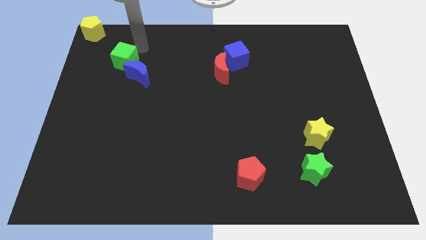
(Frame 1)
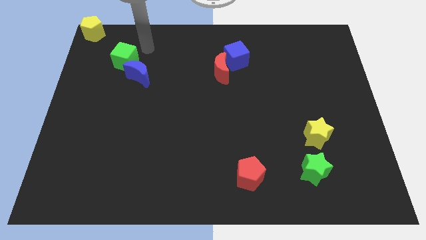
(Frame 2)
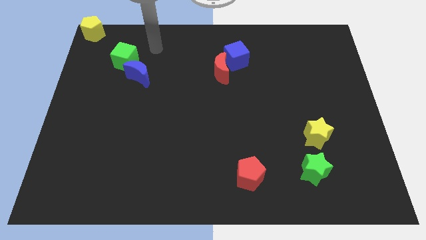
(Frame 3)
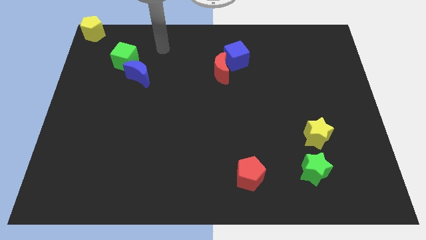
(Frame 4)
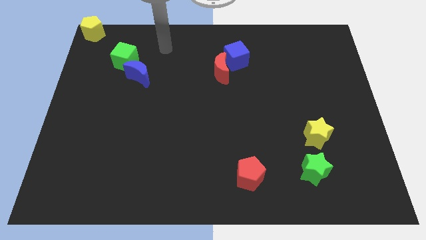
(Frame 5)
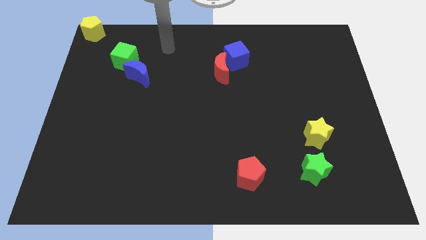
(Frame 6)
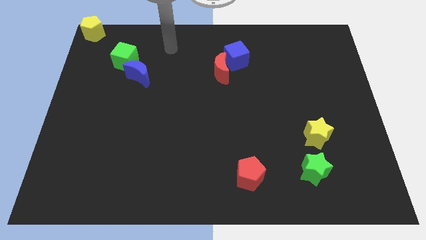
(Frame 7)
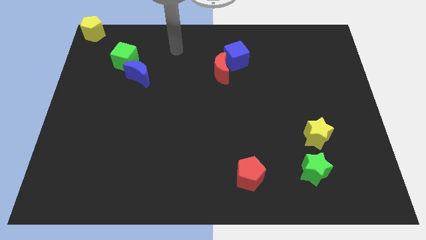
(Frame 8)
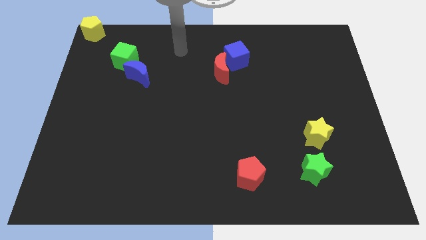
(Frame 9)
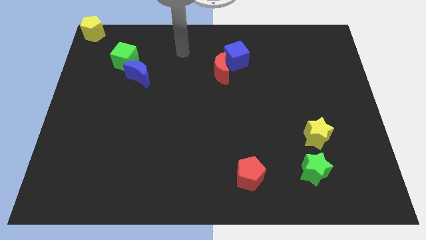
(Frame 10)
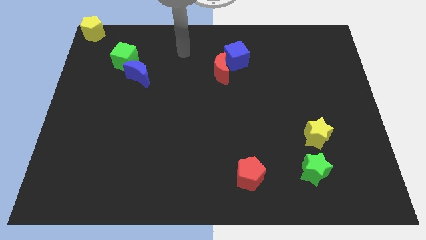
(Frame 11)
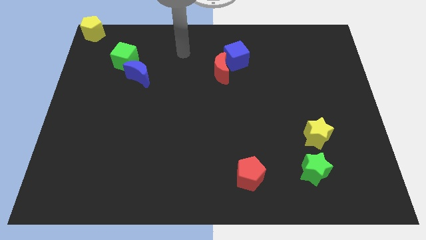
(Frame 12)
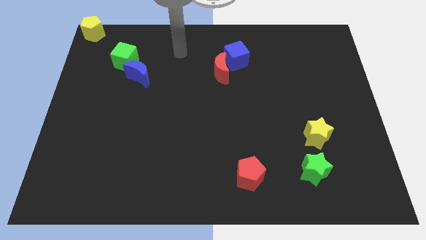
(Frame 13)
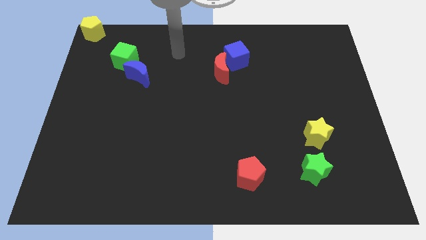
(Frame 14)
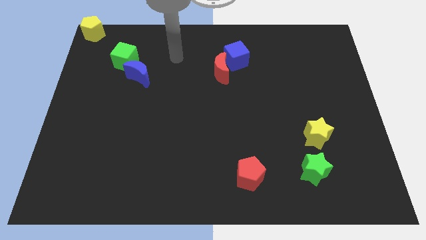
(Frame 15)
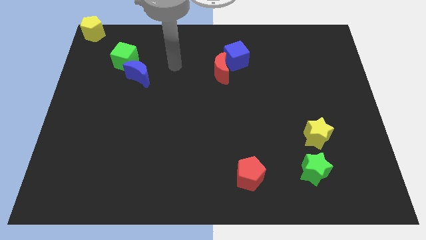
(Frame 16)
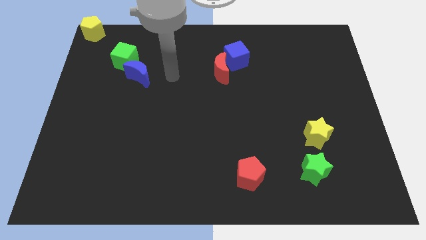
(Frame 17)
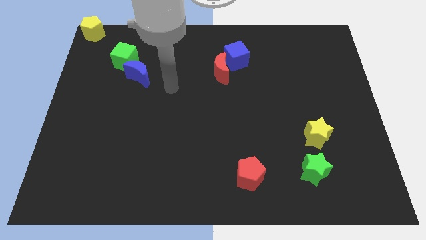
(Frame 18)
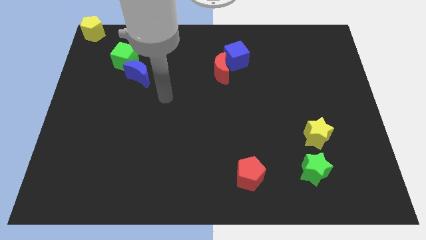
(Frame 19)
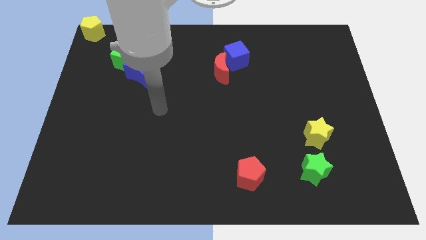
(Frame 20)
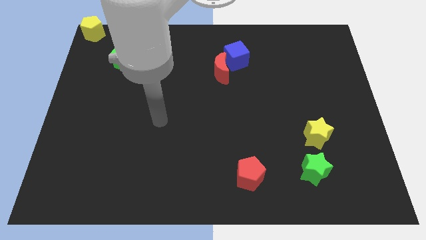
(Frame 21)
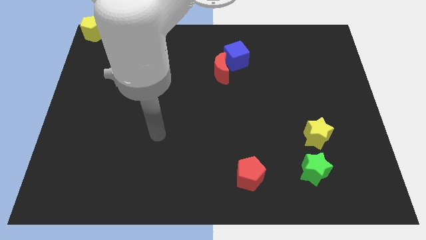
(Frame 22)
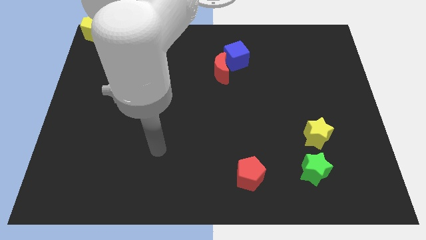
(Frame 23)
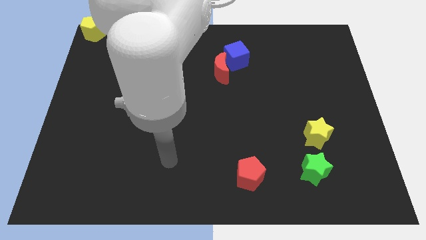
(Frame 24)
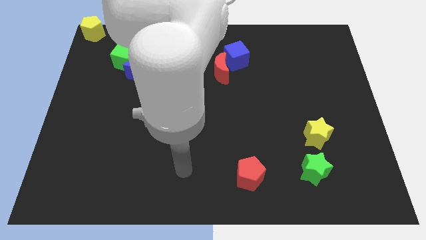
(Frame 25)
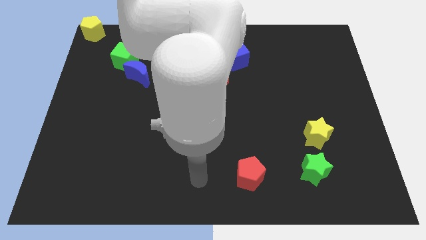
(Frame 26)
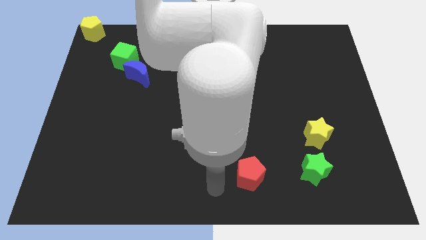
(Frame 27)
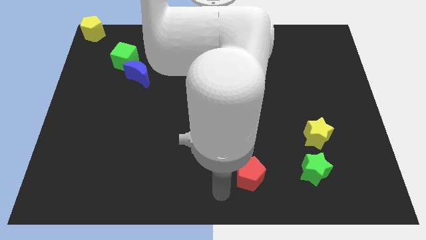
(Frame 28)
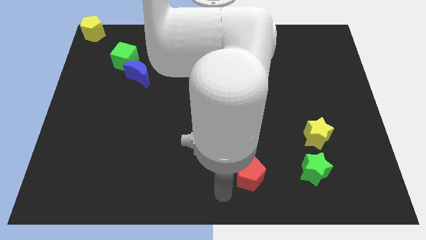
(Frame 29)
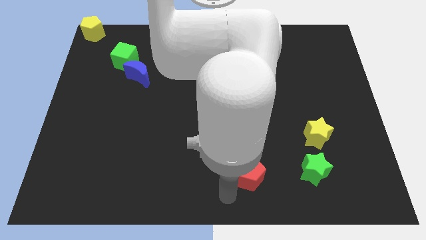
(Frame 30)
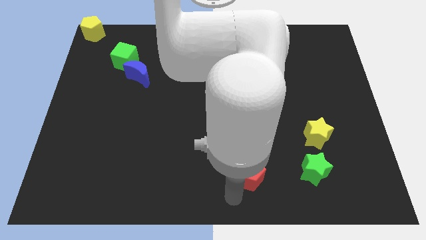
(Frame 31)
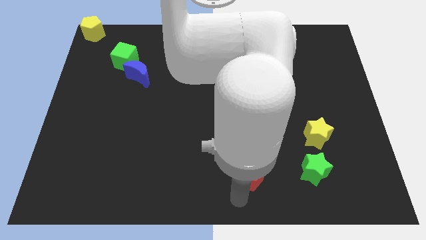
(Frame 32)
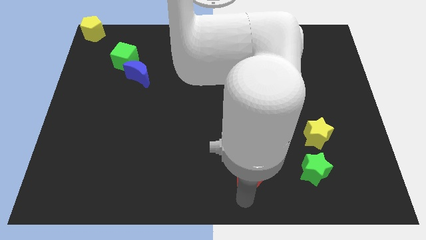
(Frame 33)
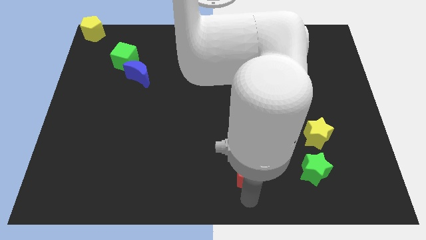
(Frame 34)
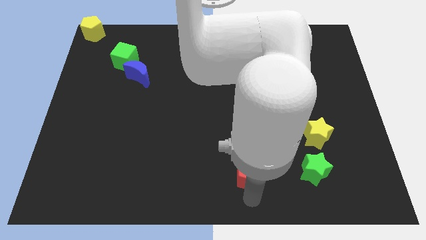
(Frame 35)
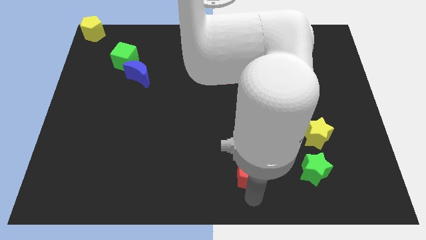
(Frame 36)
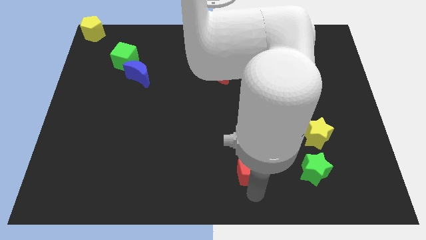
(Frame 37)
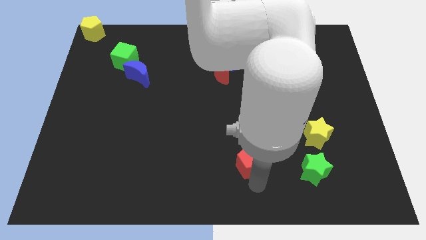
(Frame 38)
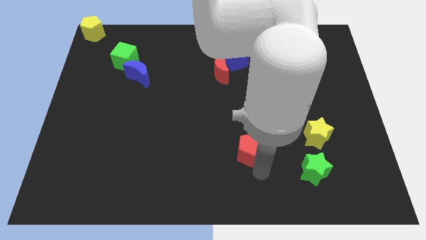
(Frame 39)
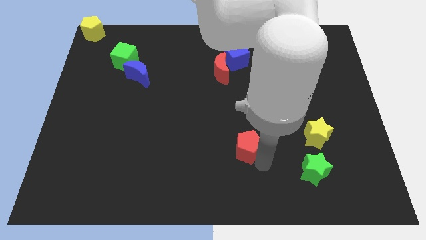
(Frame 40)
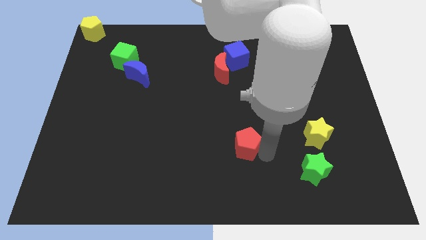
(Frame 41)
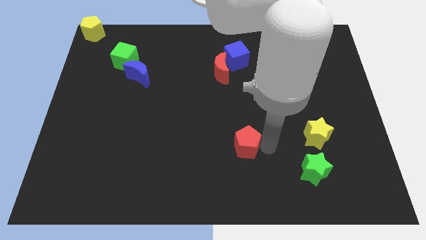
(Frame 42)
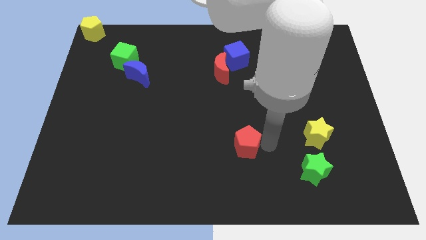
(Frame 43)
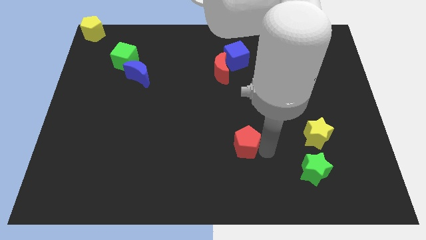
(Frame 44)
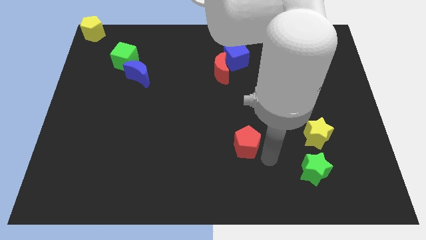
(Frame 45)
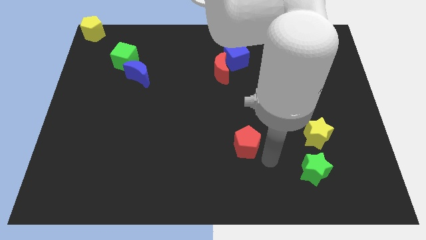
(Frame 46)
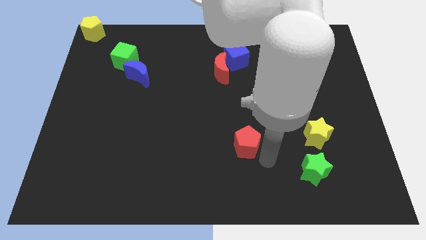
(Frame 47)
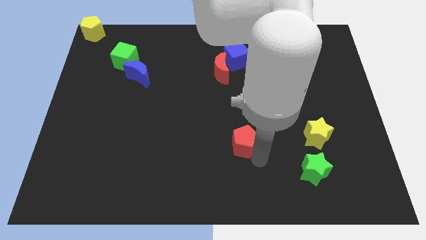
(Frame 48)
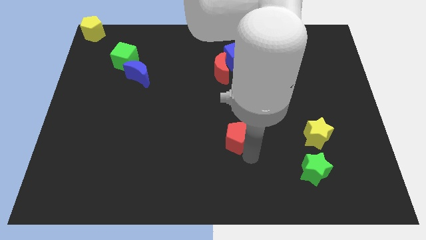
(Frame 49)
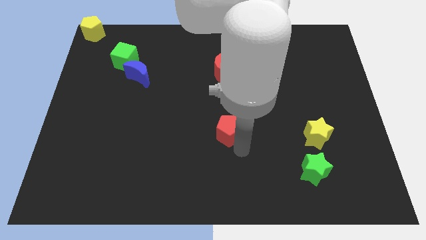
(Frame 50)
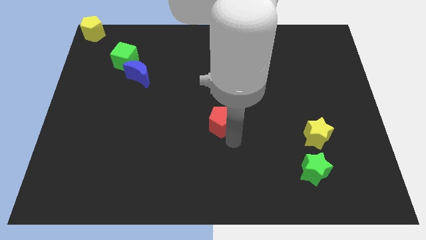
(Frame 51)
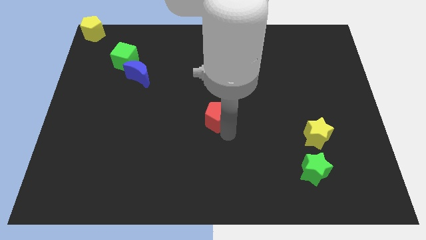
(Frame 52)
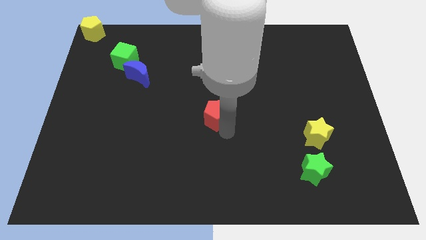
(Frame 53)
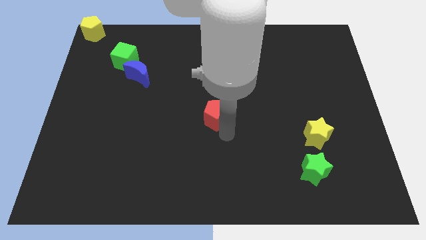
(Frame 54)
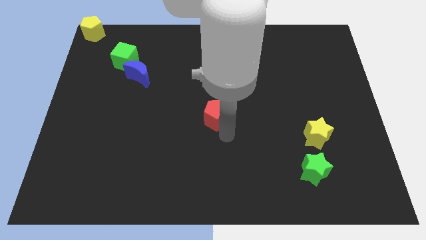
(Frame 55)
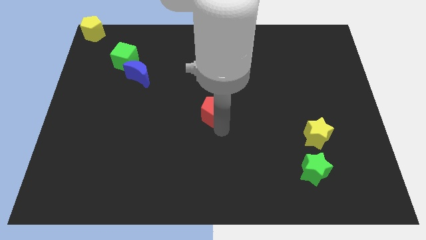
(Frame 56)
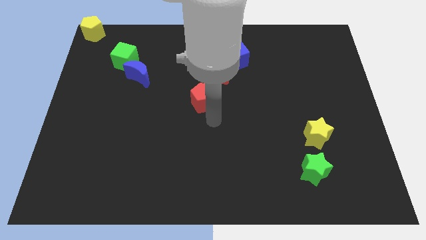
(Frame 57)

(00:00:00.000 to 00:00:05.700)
drag the red pentagon at the center of the table

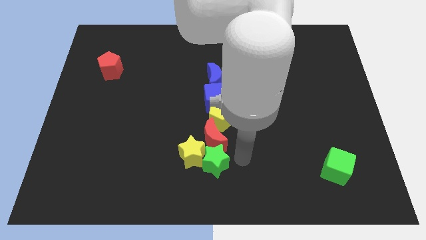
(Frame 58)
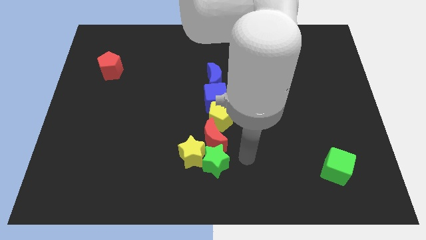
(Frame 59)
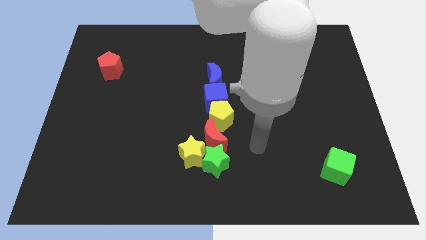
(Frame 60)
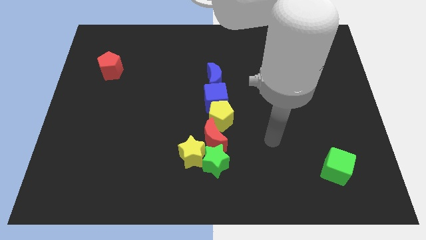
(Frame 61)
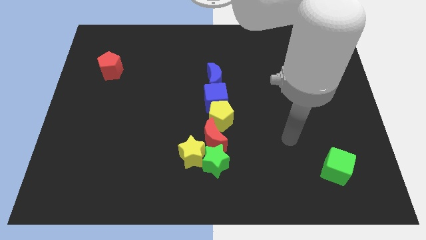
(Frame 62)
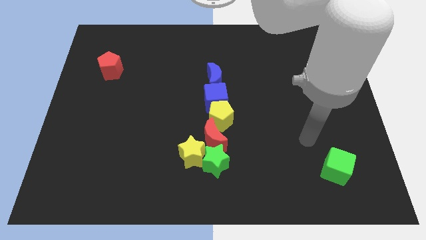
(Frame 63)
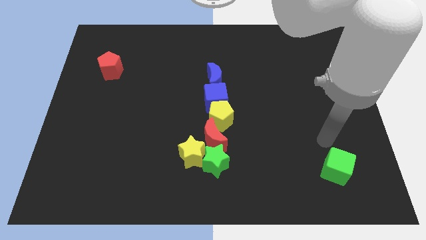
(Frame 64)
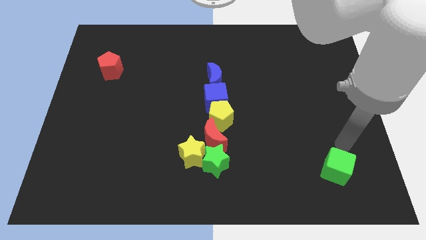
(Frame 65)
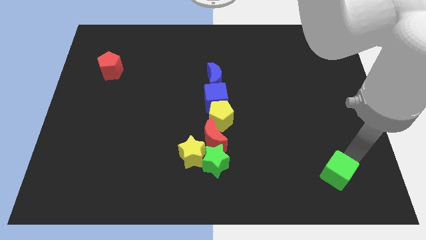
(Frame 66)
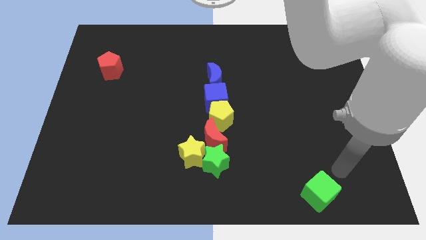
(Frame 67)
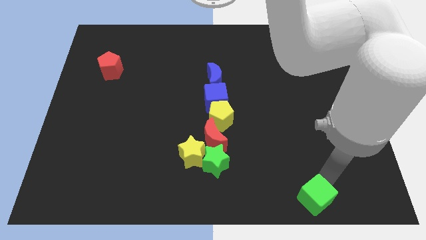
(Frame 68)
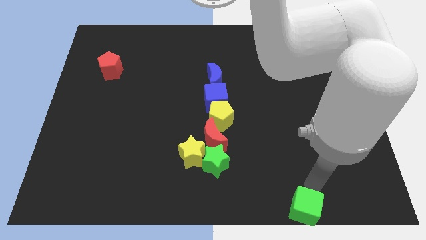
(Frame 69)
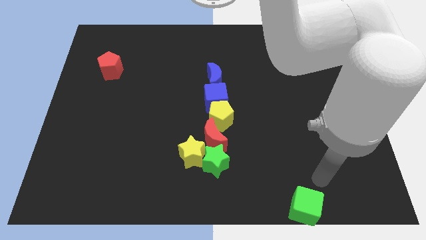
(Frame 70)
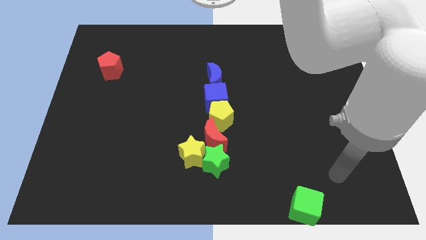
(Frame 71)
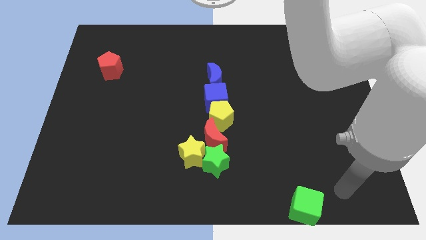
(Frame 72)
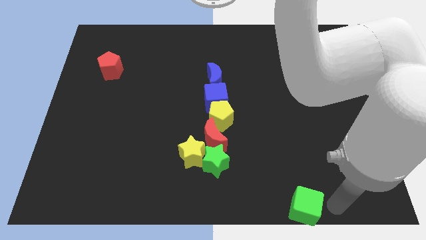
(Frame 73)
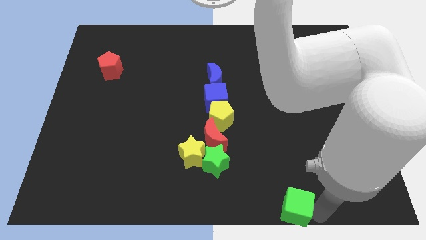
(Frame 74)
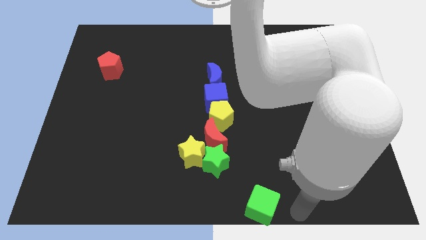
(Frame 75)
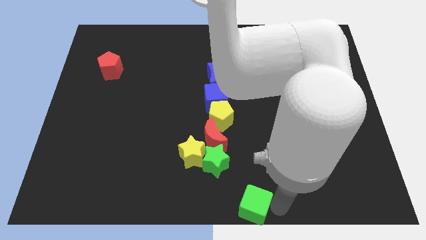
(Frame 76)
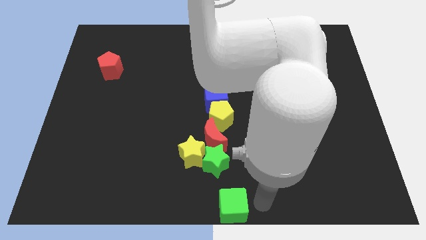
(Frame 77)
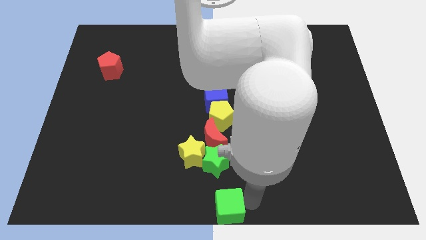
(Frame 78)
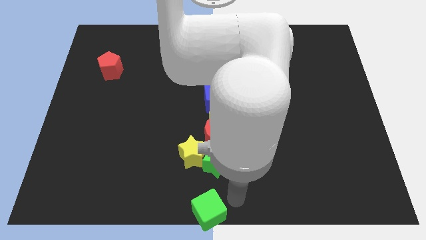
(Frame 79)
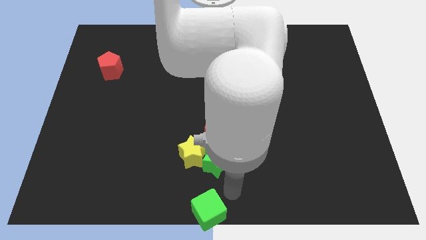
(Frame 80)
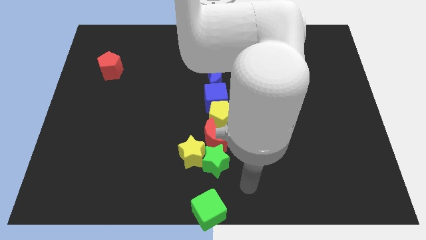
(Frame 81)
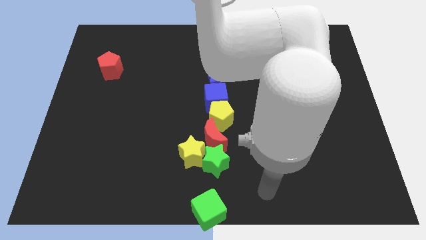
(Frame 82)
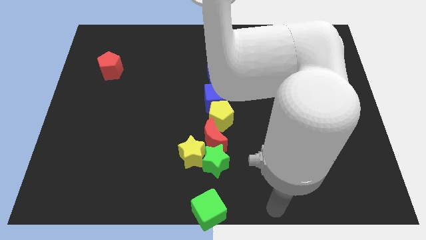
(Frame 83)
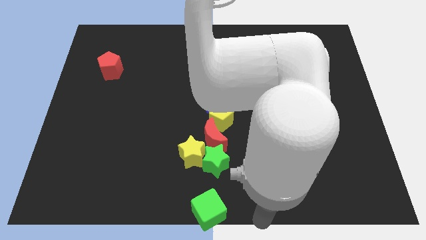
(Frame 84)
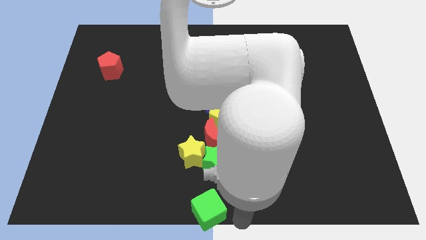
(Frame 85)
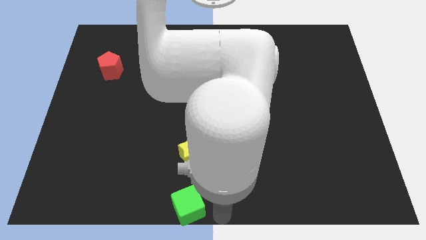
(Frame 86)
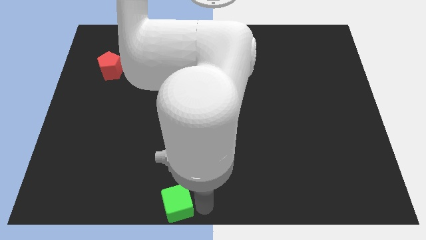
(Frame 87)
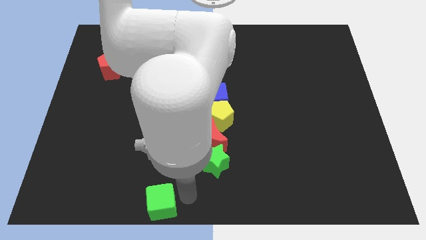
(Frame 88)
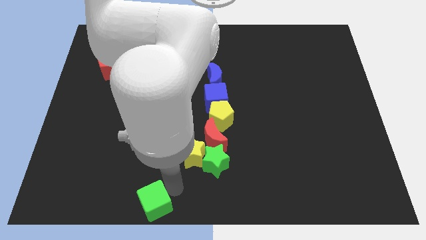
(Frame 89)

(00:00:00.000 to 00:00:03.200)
put the green cube diagonally bottom left to the green star

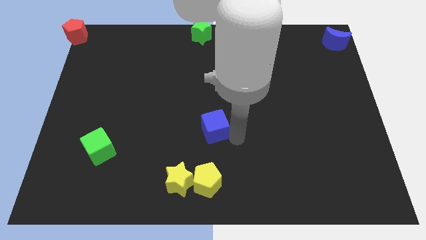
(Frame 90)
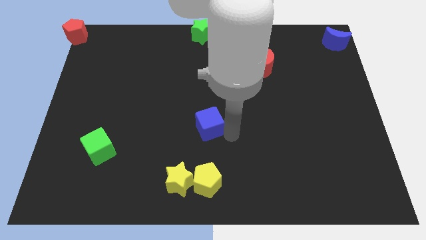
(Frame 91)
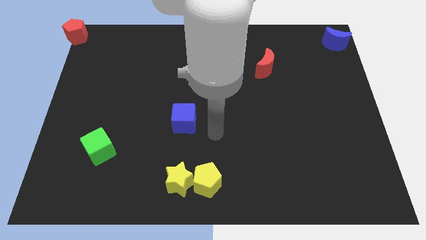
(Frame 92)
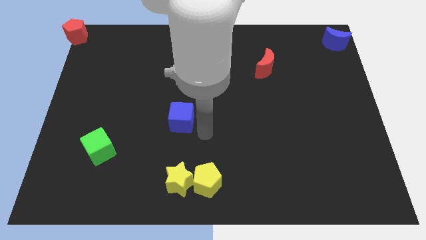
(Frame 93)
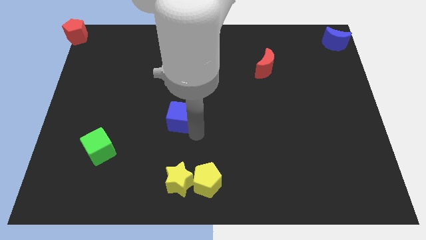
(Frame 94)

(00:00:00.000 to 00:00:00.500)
move the blue cube above the yellow star
